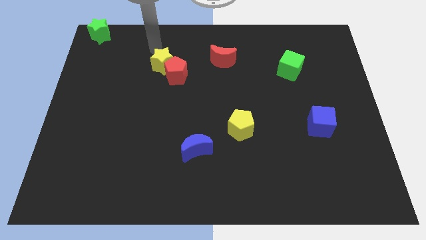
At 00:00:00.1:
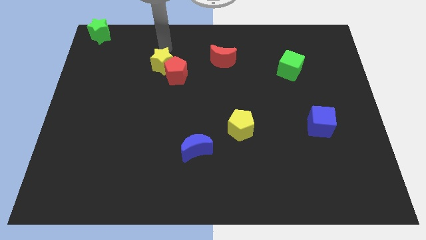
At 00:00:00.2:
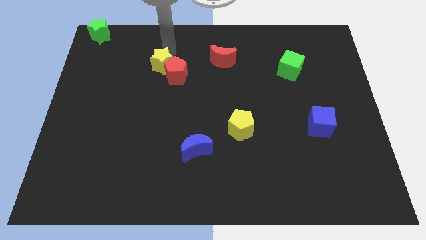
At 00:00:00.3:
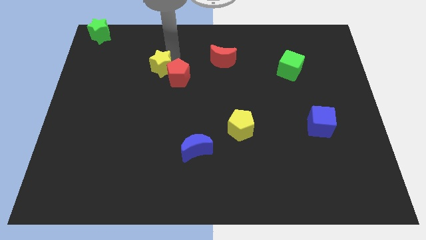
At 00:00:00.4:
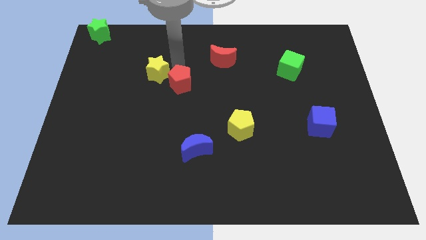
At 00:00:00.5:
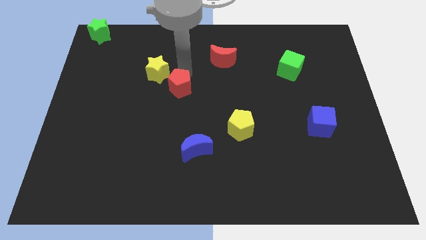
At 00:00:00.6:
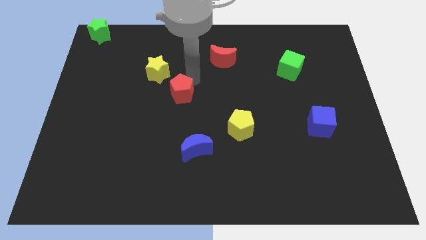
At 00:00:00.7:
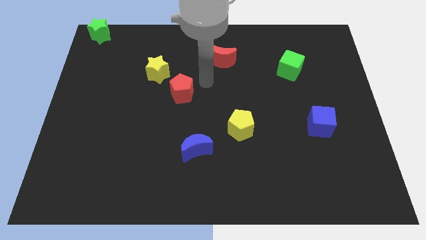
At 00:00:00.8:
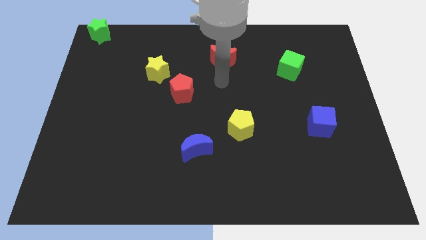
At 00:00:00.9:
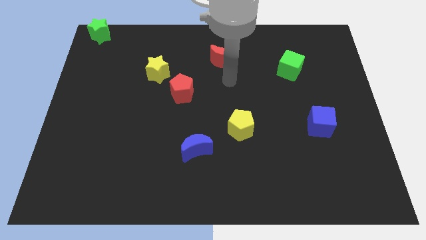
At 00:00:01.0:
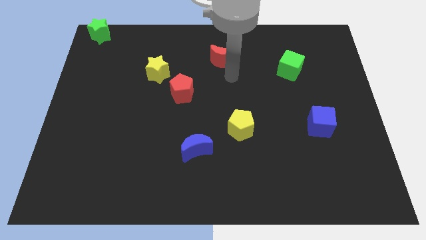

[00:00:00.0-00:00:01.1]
separate the yellow star and red pentagon

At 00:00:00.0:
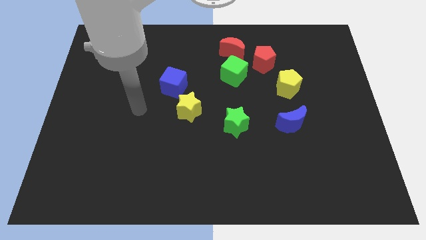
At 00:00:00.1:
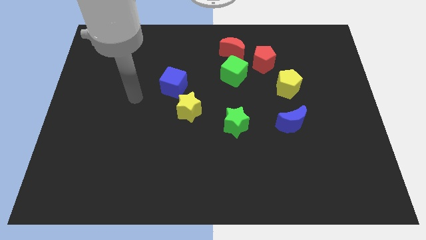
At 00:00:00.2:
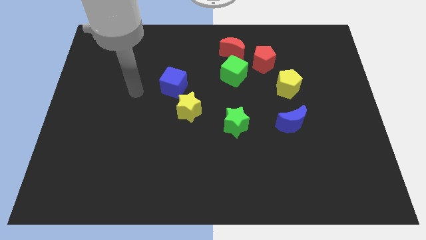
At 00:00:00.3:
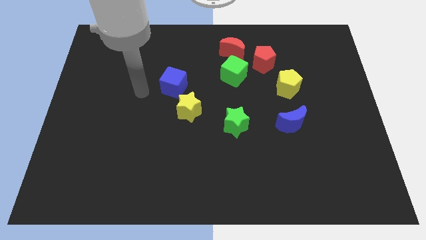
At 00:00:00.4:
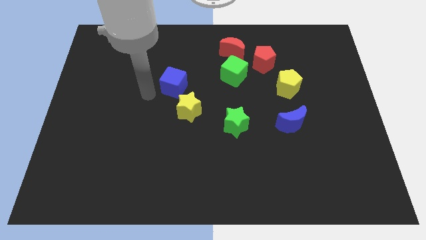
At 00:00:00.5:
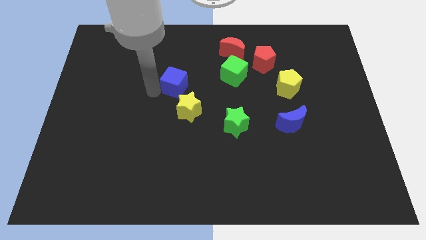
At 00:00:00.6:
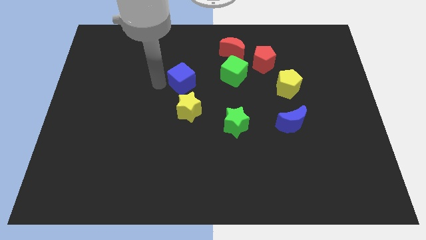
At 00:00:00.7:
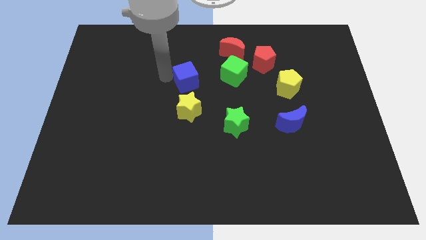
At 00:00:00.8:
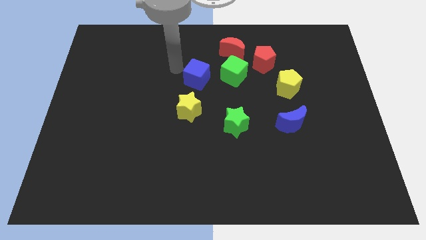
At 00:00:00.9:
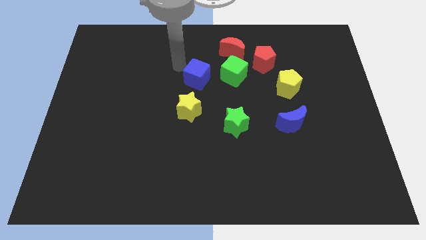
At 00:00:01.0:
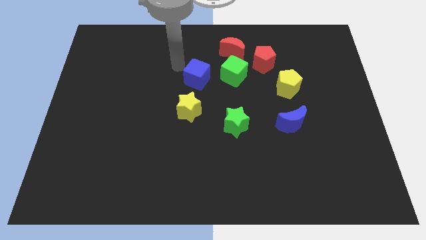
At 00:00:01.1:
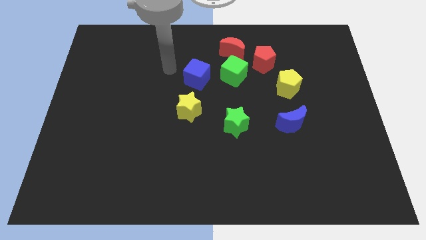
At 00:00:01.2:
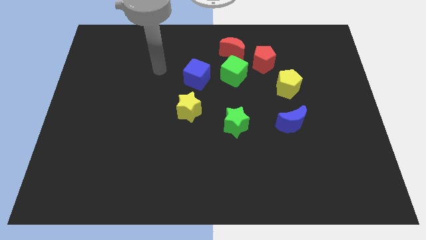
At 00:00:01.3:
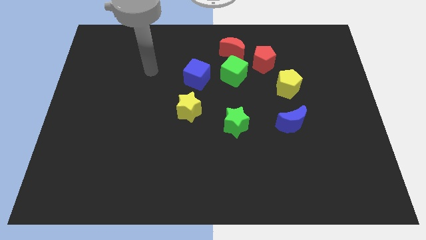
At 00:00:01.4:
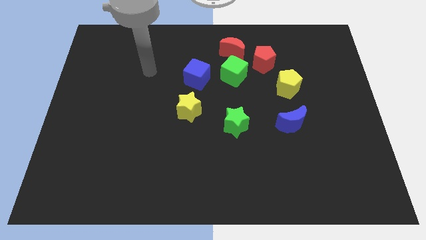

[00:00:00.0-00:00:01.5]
move the blue cube into the green cube

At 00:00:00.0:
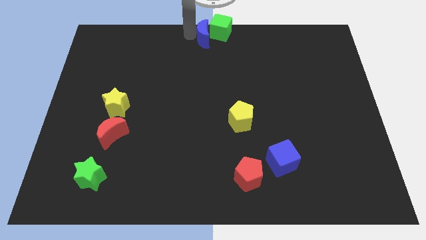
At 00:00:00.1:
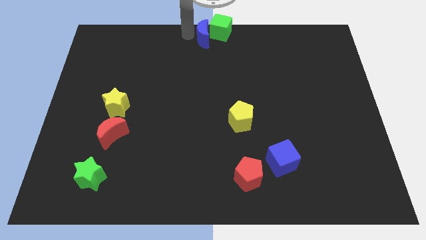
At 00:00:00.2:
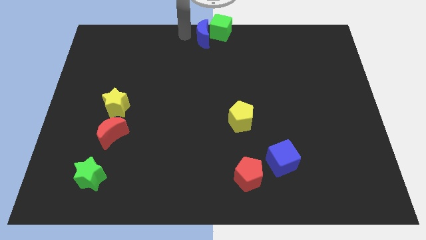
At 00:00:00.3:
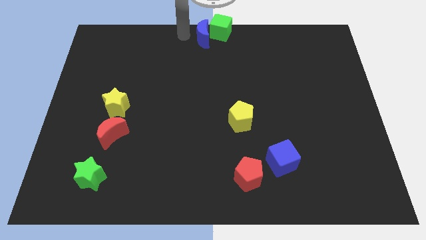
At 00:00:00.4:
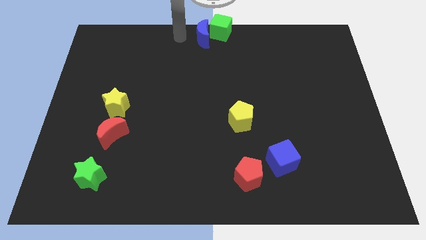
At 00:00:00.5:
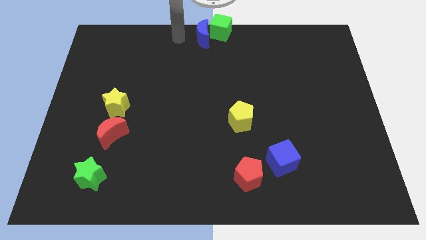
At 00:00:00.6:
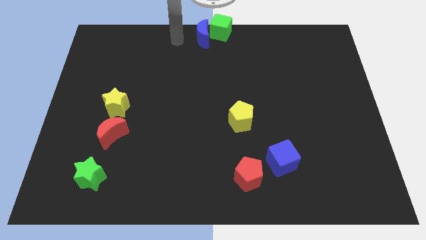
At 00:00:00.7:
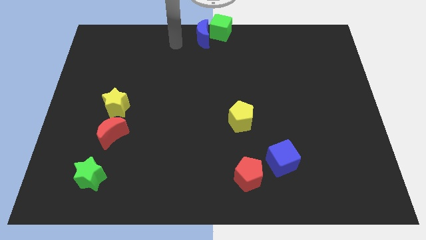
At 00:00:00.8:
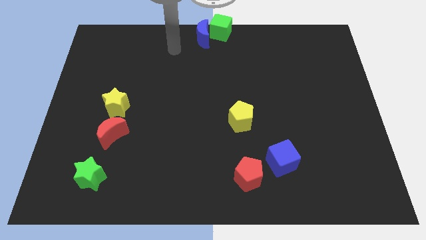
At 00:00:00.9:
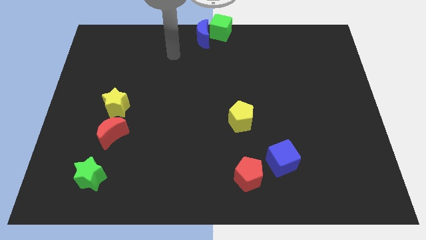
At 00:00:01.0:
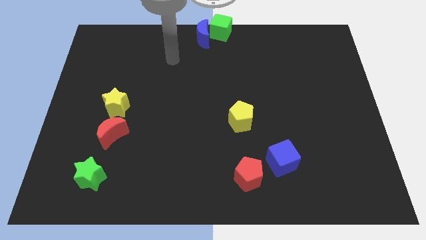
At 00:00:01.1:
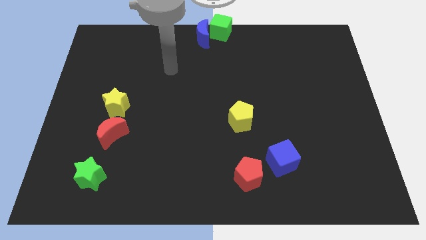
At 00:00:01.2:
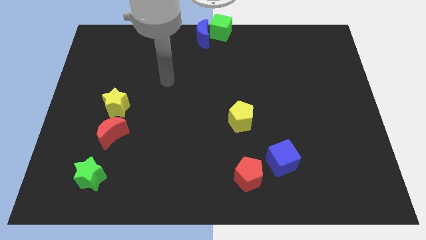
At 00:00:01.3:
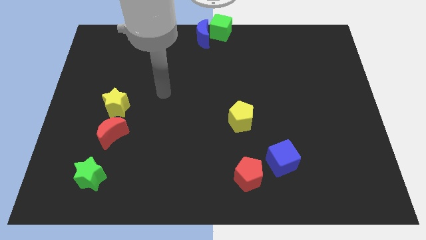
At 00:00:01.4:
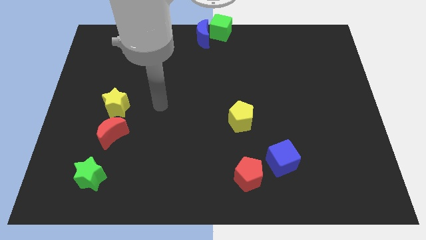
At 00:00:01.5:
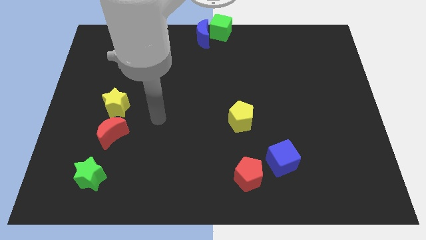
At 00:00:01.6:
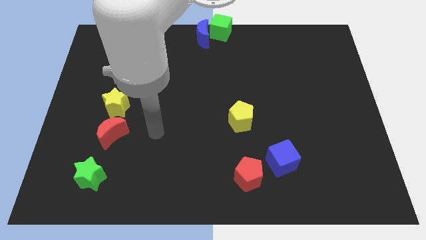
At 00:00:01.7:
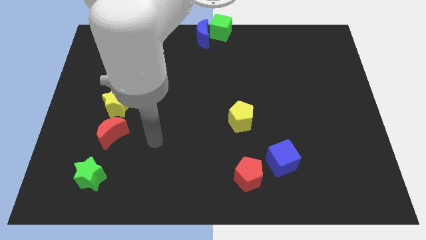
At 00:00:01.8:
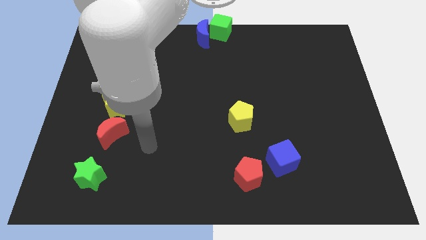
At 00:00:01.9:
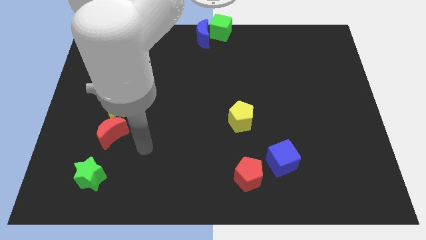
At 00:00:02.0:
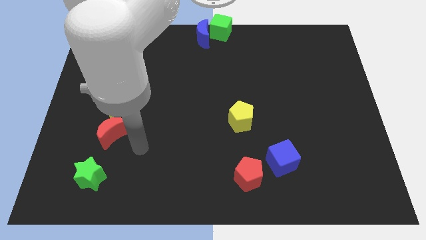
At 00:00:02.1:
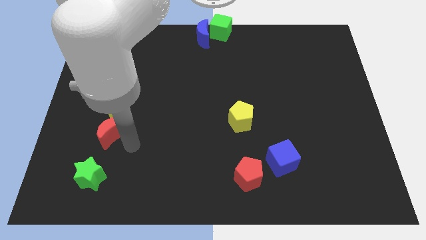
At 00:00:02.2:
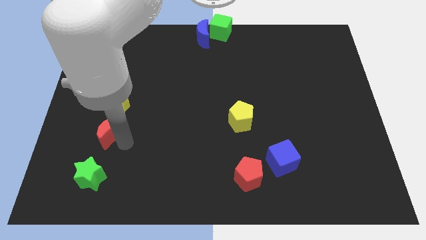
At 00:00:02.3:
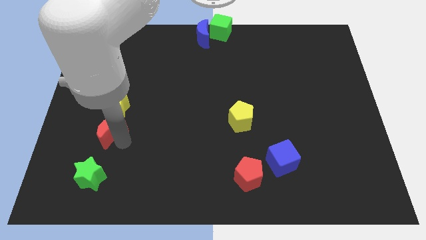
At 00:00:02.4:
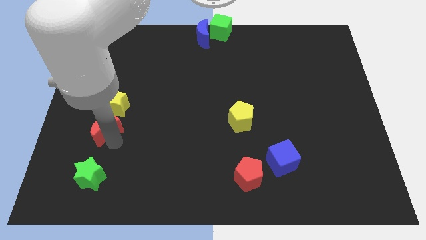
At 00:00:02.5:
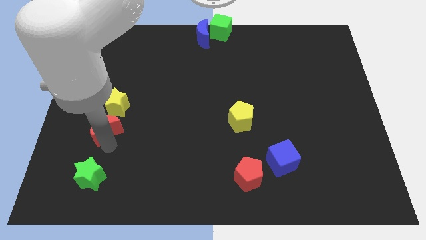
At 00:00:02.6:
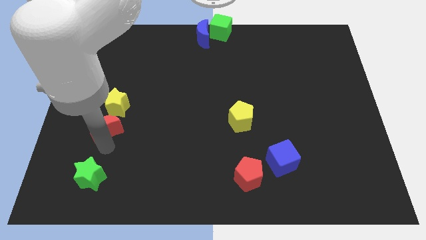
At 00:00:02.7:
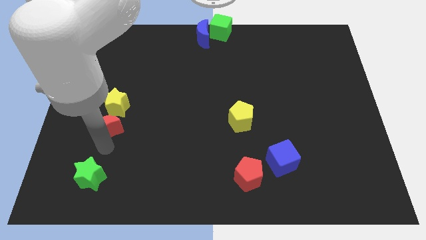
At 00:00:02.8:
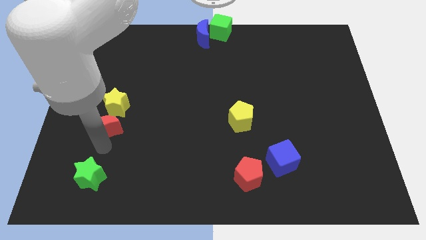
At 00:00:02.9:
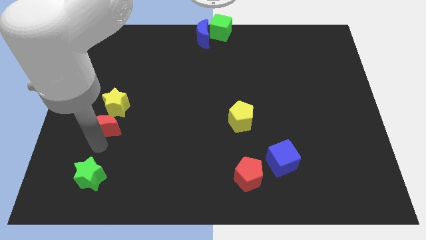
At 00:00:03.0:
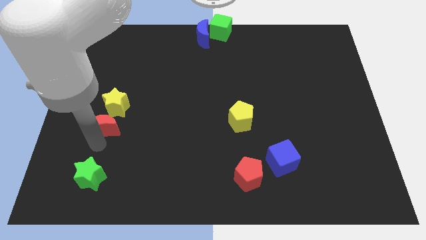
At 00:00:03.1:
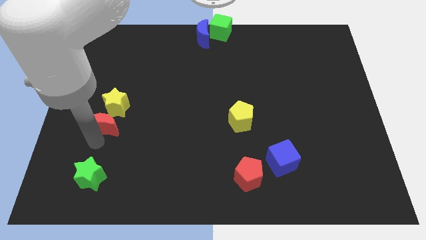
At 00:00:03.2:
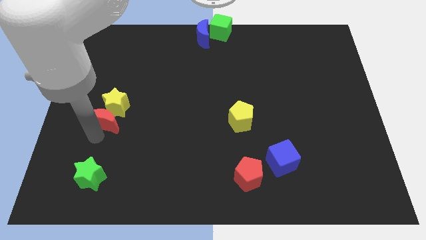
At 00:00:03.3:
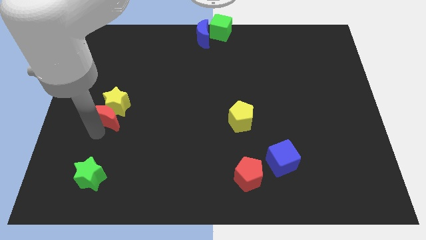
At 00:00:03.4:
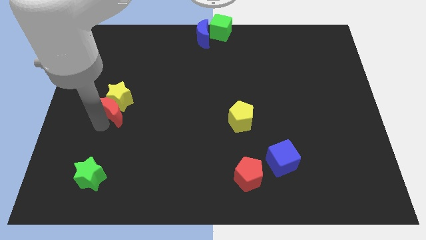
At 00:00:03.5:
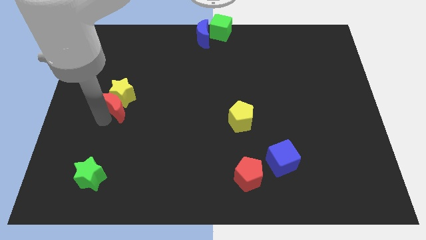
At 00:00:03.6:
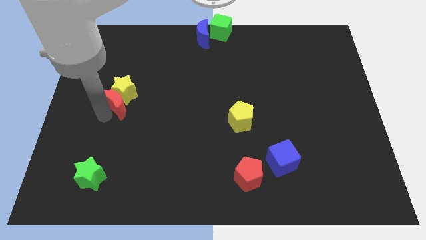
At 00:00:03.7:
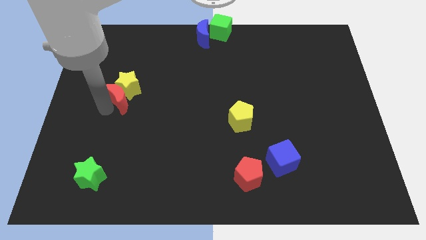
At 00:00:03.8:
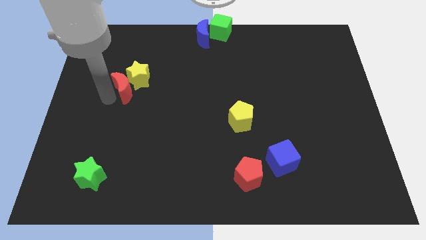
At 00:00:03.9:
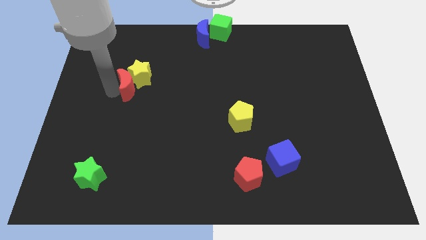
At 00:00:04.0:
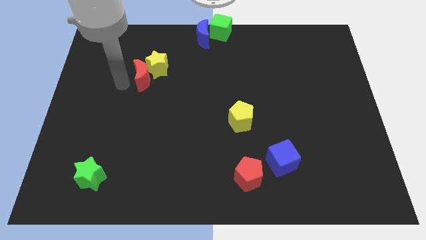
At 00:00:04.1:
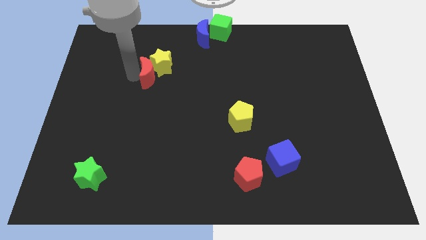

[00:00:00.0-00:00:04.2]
push the yellow star with the red moon towards the top center of the board

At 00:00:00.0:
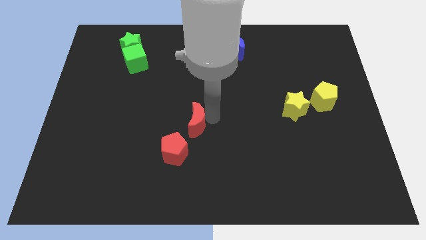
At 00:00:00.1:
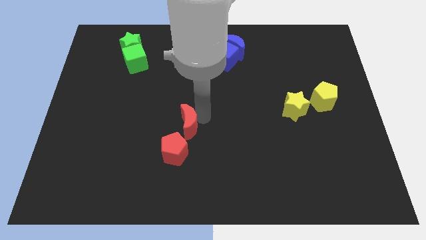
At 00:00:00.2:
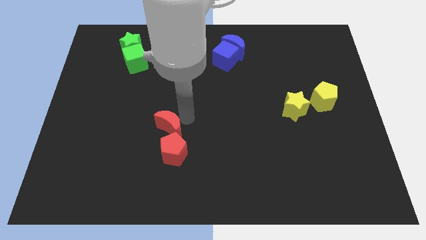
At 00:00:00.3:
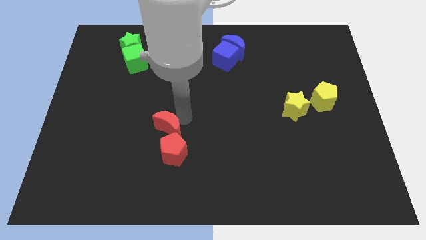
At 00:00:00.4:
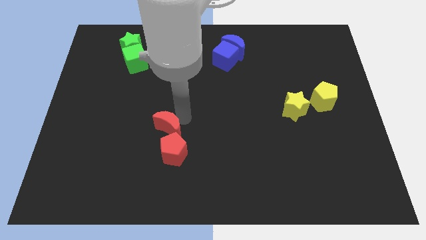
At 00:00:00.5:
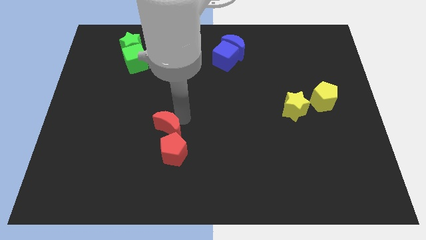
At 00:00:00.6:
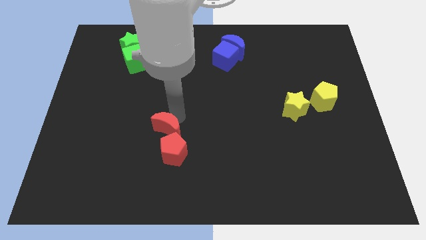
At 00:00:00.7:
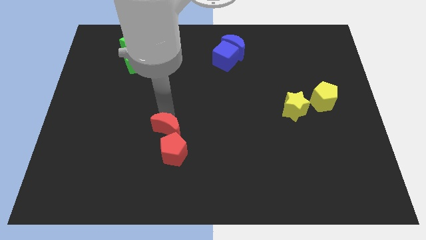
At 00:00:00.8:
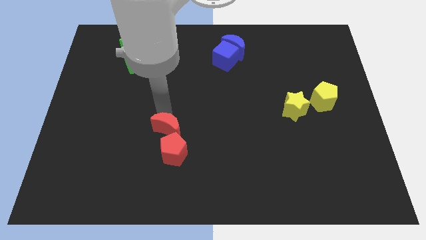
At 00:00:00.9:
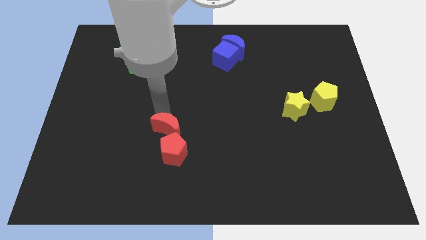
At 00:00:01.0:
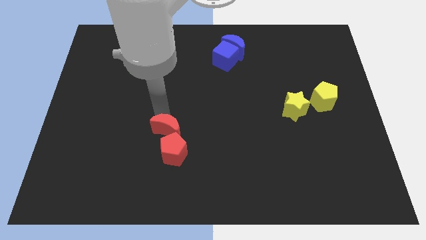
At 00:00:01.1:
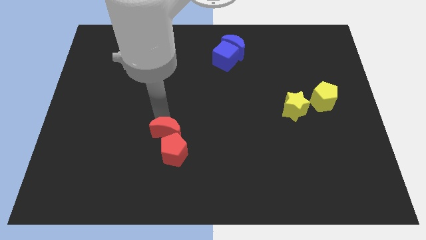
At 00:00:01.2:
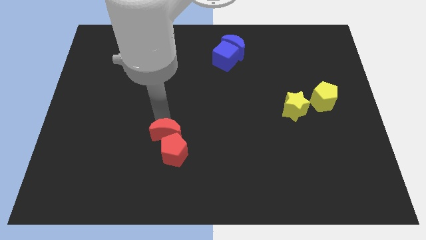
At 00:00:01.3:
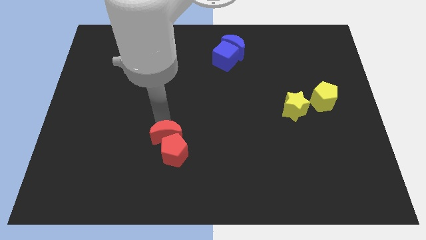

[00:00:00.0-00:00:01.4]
move the red crescent into the red pentagon

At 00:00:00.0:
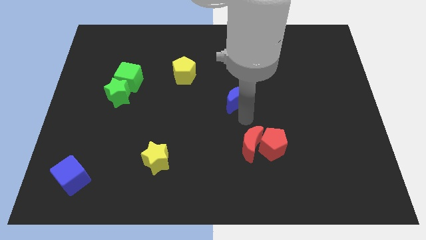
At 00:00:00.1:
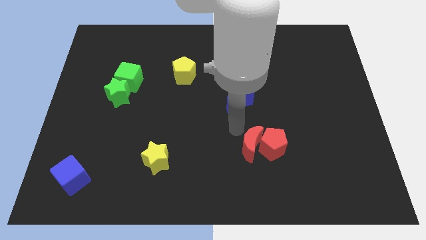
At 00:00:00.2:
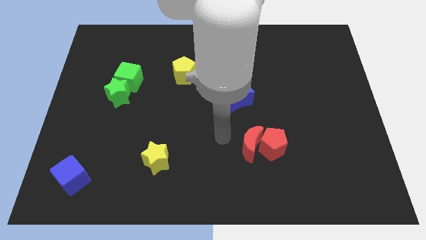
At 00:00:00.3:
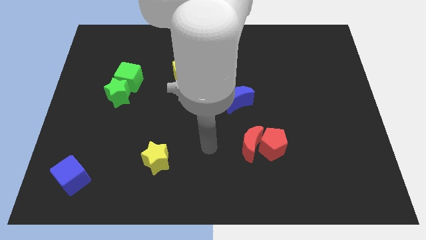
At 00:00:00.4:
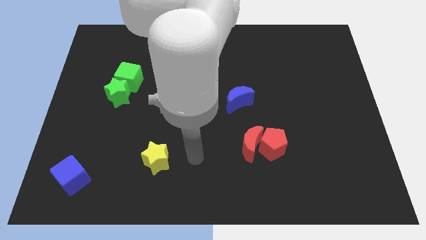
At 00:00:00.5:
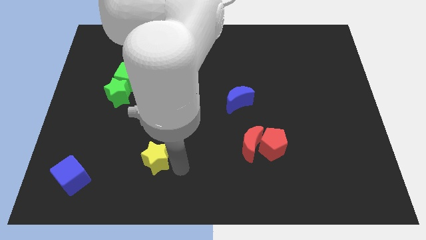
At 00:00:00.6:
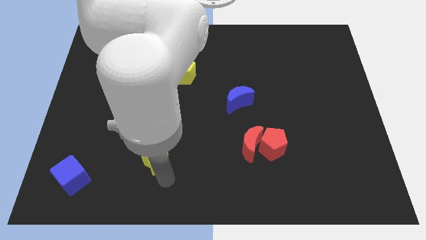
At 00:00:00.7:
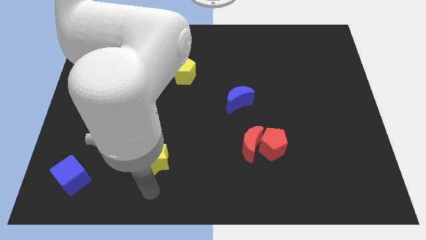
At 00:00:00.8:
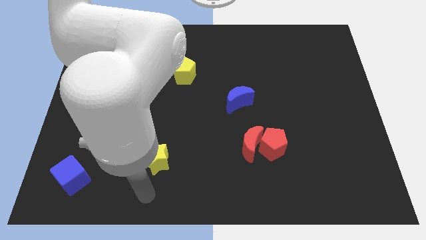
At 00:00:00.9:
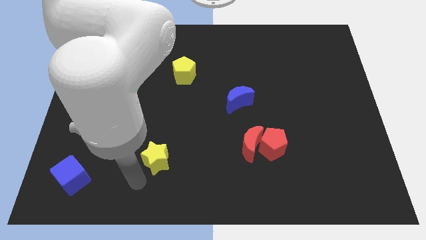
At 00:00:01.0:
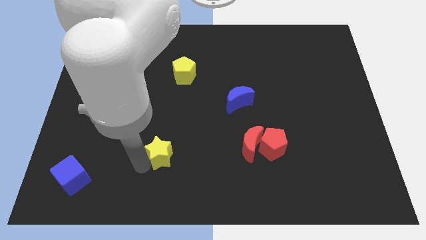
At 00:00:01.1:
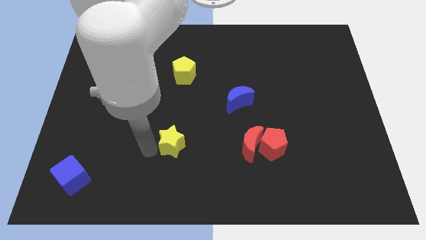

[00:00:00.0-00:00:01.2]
place your arm left to the yellow star
